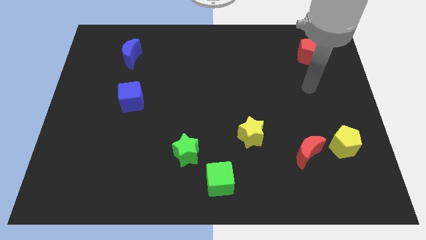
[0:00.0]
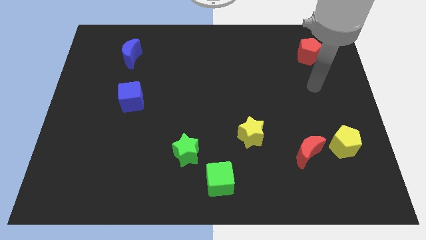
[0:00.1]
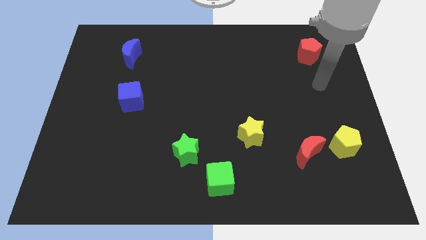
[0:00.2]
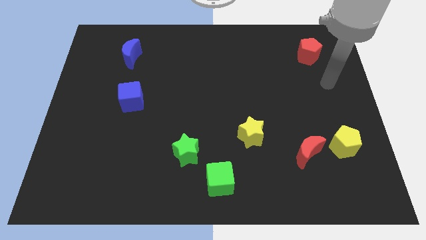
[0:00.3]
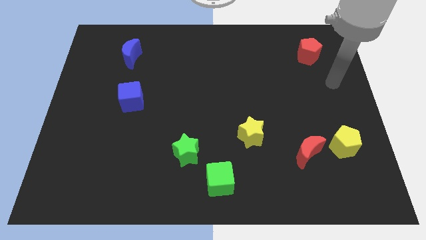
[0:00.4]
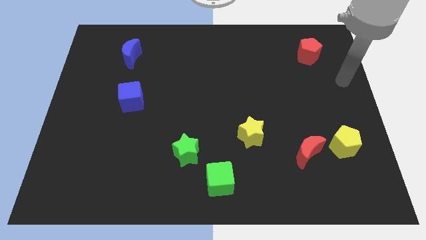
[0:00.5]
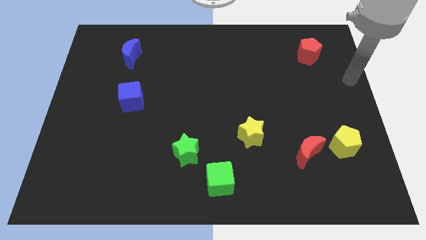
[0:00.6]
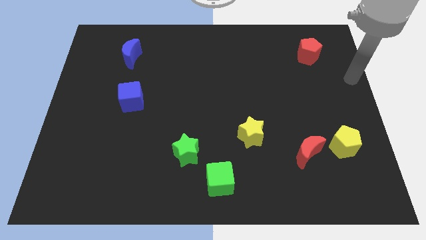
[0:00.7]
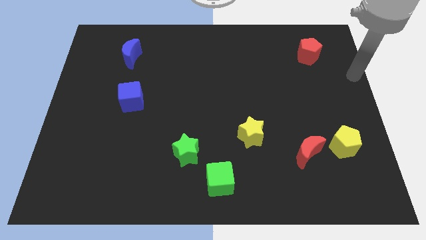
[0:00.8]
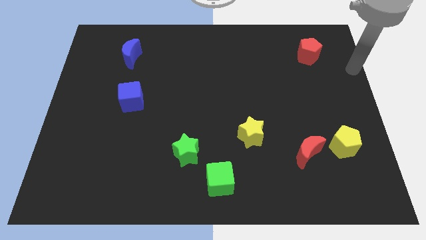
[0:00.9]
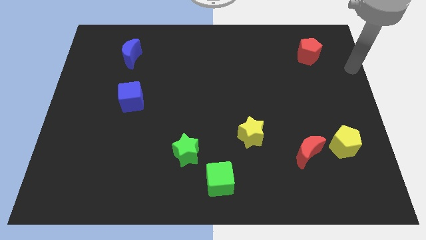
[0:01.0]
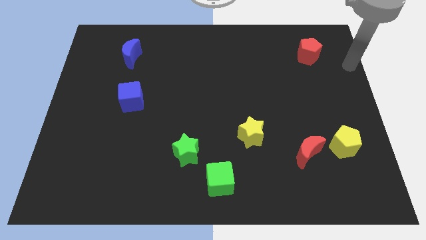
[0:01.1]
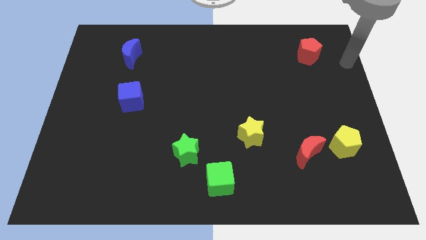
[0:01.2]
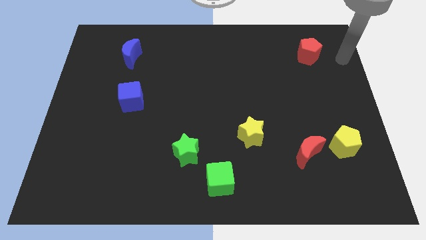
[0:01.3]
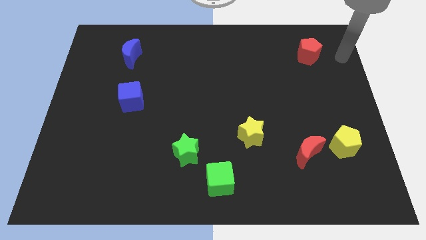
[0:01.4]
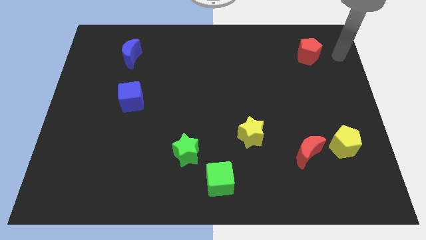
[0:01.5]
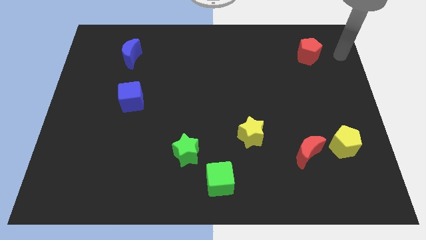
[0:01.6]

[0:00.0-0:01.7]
put your hand parallel right to the red pentagon

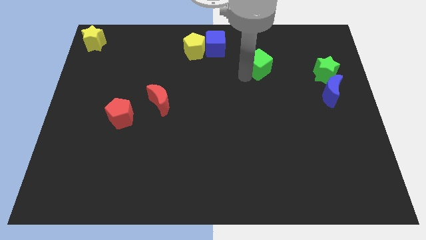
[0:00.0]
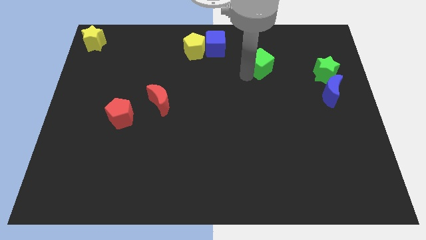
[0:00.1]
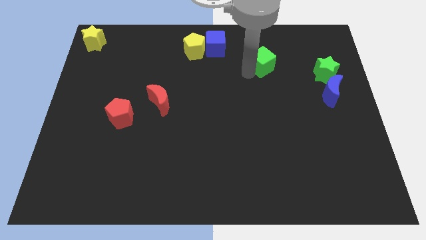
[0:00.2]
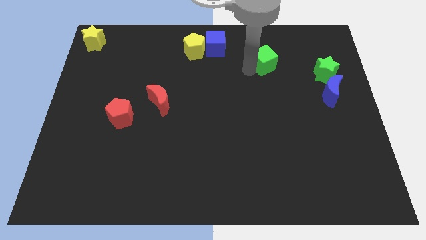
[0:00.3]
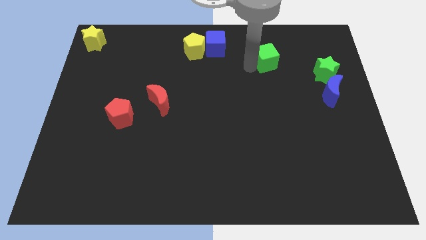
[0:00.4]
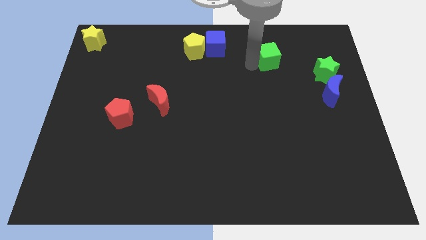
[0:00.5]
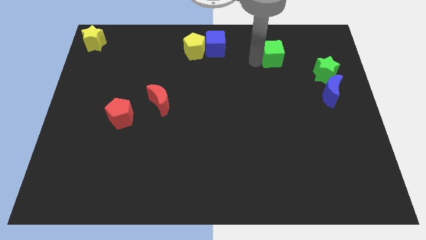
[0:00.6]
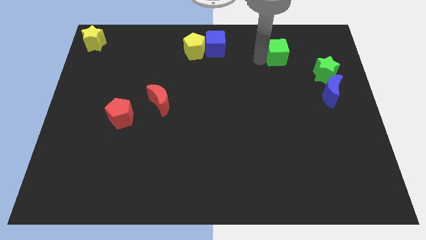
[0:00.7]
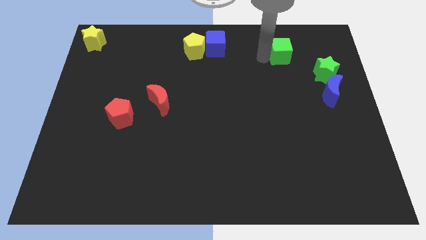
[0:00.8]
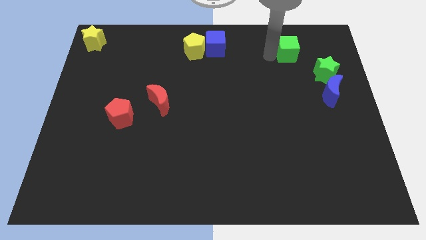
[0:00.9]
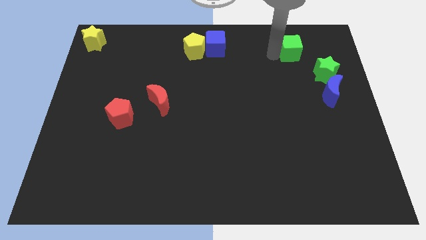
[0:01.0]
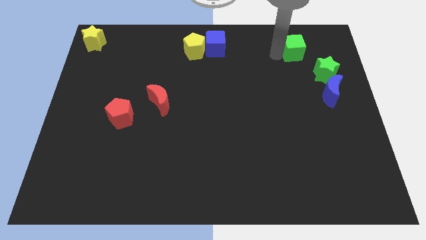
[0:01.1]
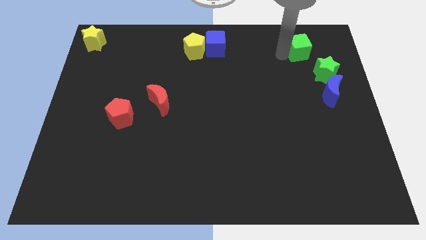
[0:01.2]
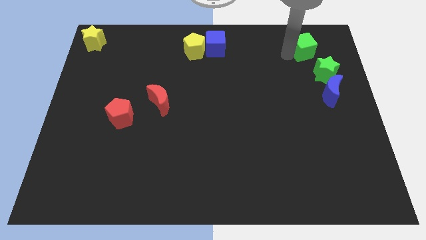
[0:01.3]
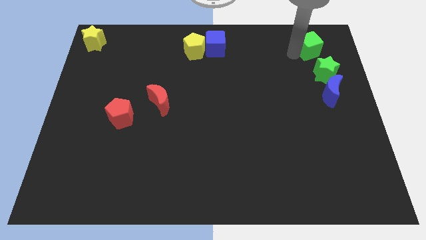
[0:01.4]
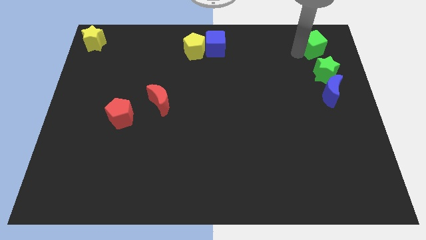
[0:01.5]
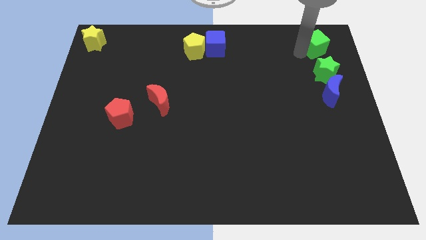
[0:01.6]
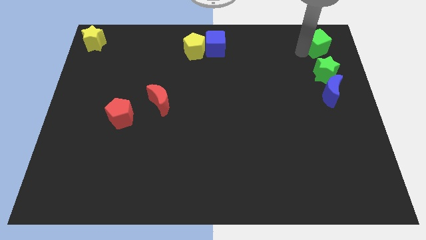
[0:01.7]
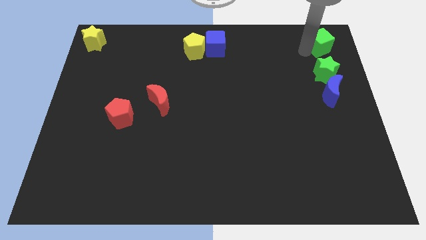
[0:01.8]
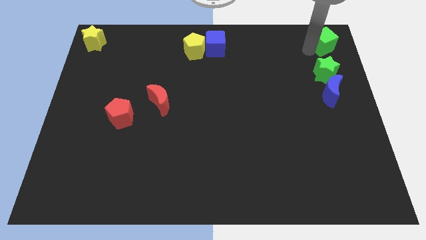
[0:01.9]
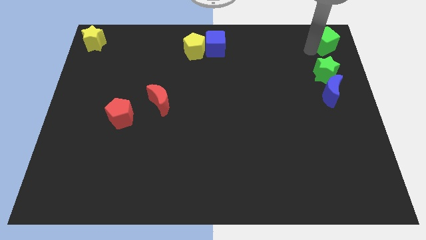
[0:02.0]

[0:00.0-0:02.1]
place the green cube above the green star

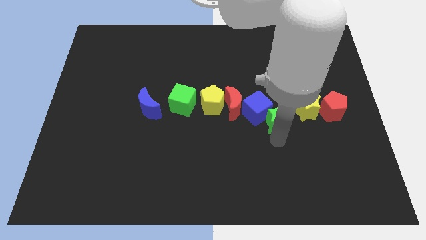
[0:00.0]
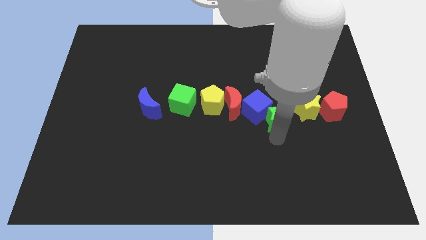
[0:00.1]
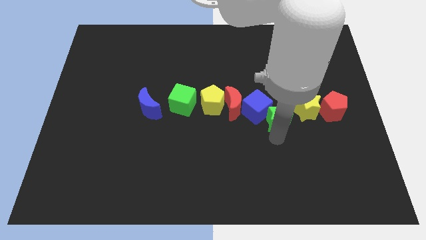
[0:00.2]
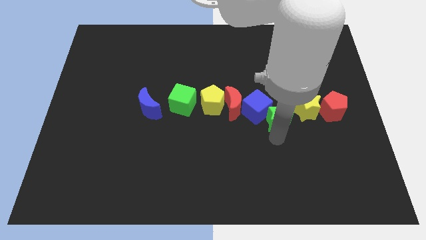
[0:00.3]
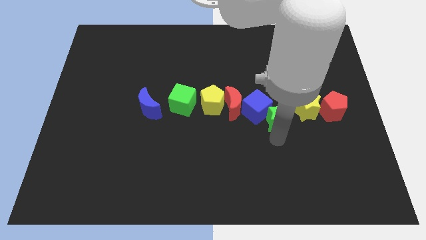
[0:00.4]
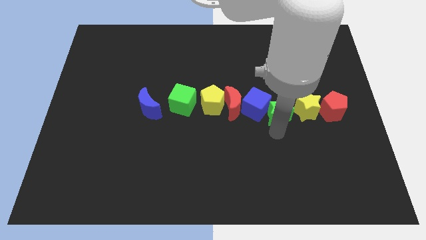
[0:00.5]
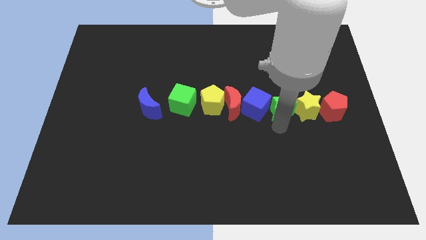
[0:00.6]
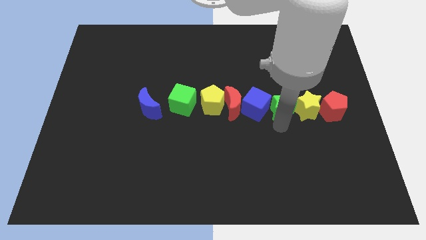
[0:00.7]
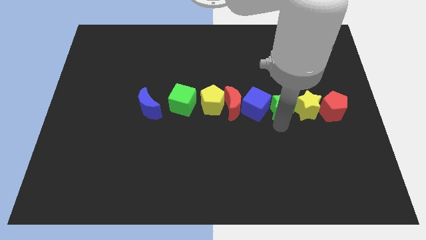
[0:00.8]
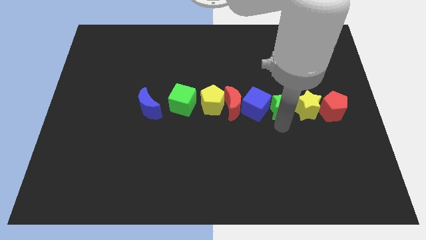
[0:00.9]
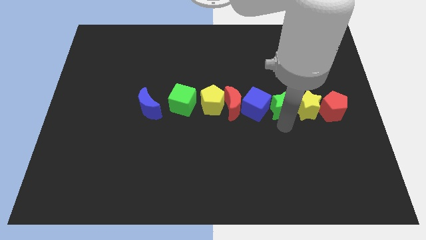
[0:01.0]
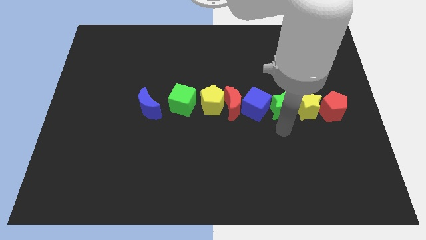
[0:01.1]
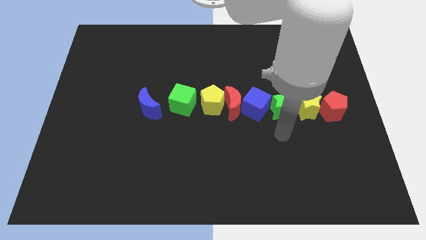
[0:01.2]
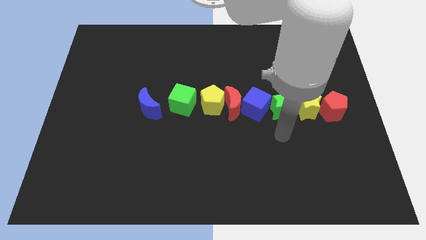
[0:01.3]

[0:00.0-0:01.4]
move the green star up slightly

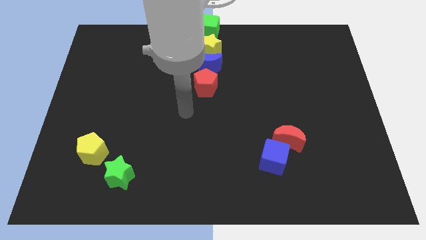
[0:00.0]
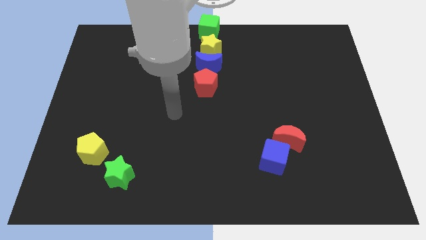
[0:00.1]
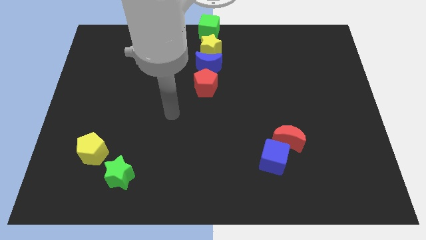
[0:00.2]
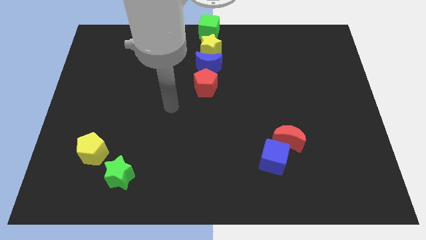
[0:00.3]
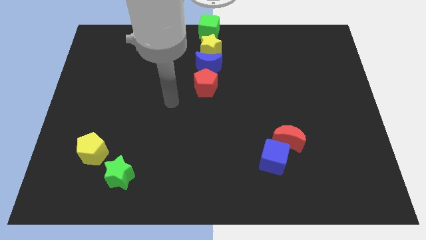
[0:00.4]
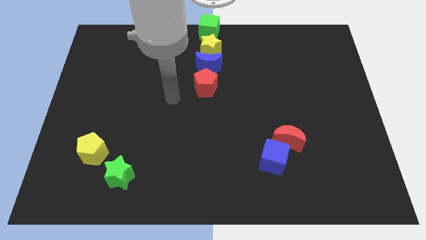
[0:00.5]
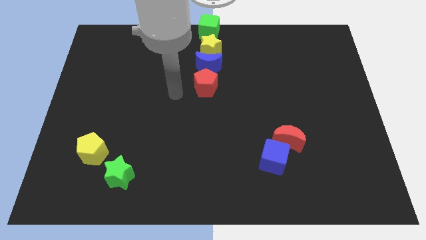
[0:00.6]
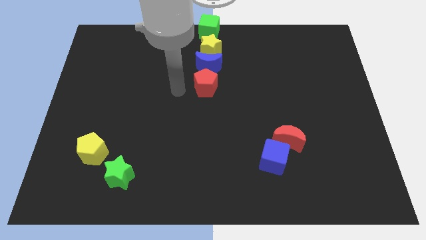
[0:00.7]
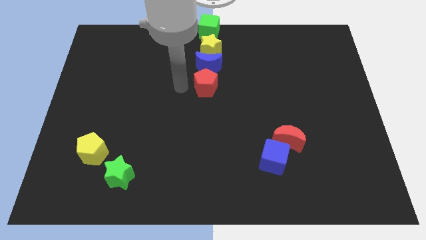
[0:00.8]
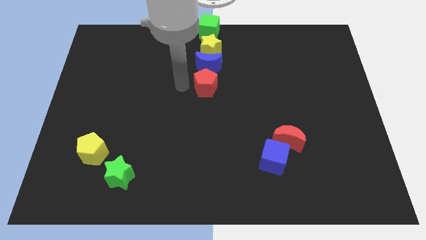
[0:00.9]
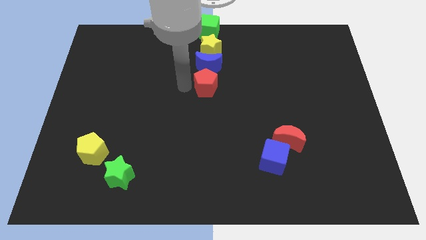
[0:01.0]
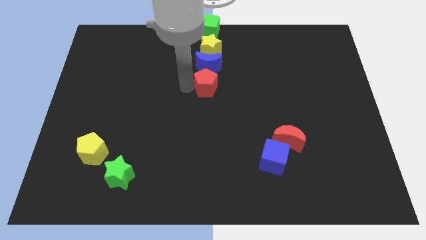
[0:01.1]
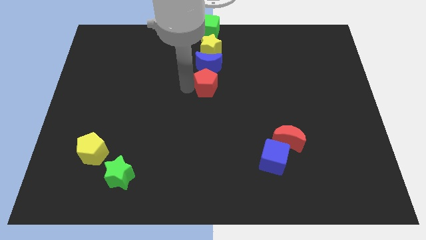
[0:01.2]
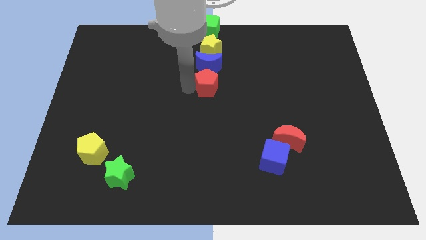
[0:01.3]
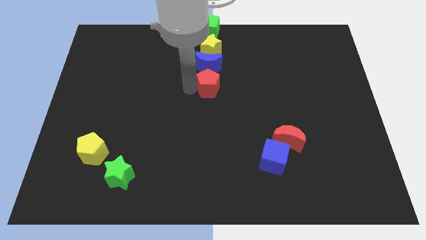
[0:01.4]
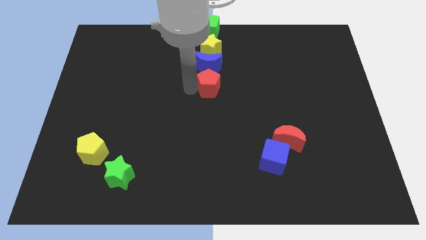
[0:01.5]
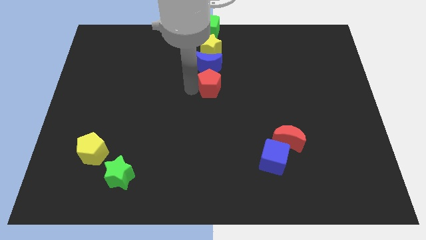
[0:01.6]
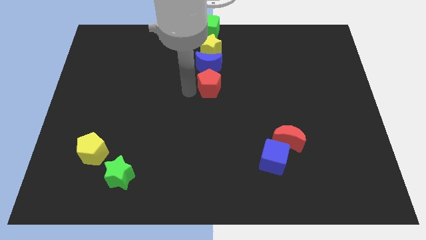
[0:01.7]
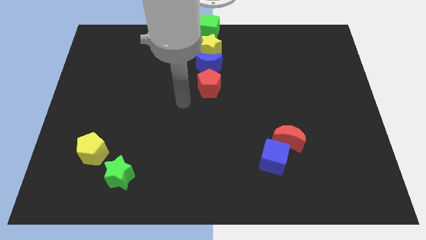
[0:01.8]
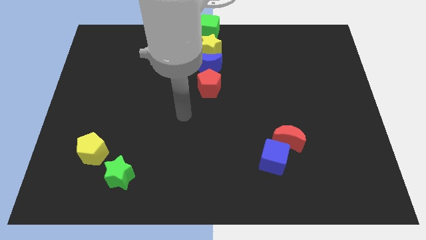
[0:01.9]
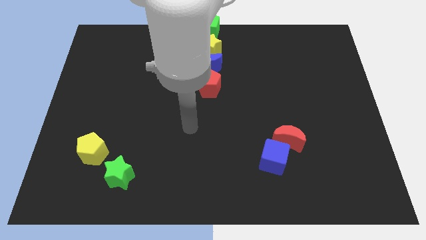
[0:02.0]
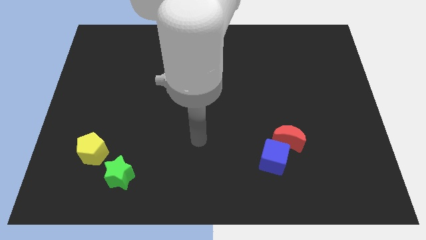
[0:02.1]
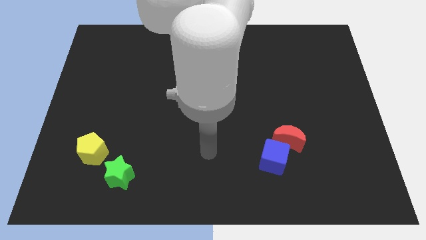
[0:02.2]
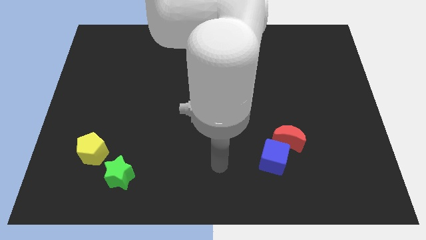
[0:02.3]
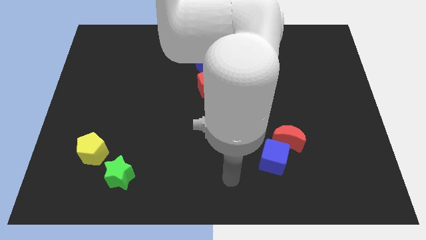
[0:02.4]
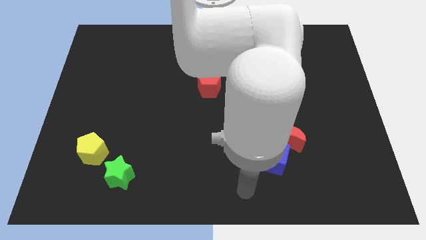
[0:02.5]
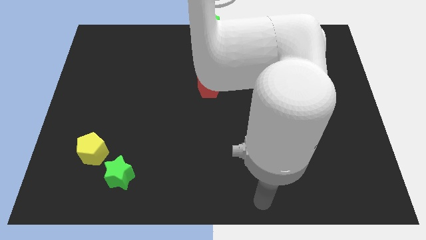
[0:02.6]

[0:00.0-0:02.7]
slightly push the red pentagon towards the right side and move away

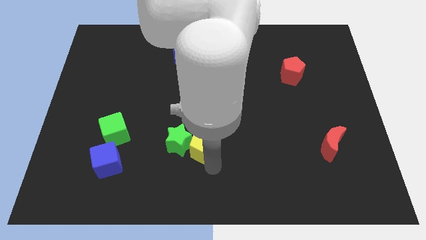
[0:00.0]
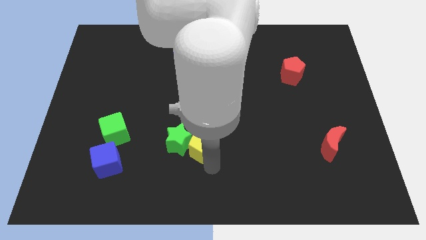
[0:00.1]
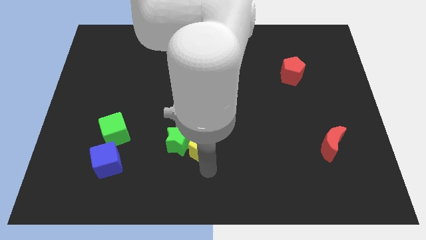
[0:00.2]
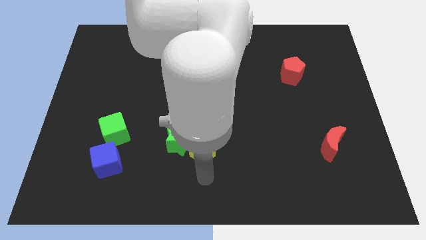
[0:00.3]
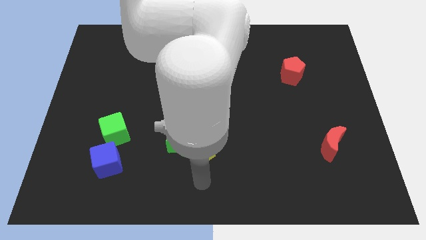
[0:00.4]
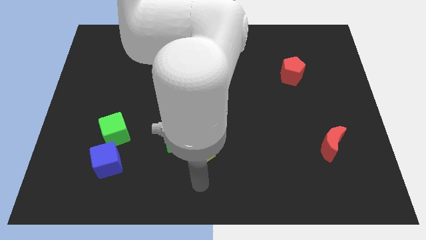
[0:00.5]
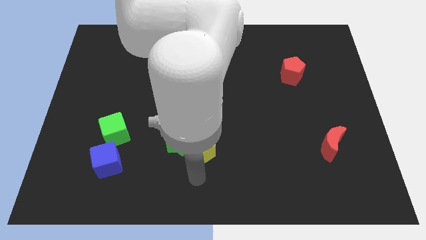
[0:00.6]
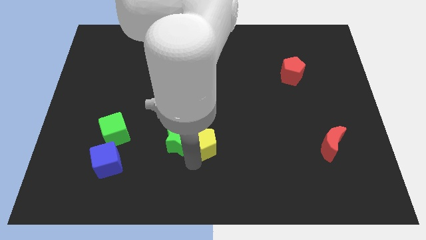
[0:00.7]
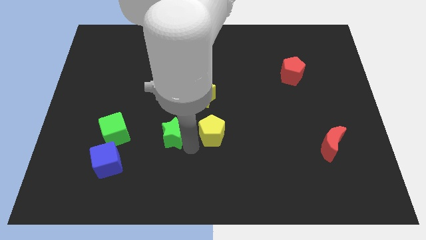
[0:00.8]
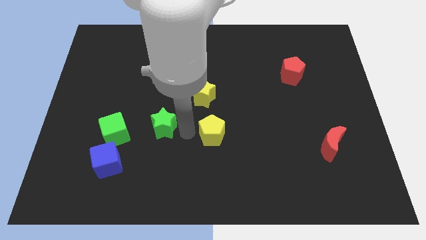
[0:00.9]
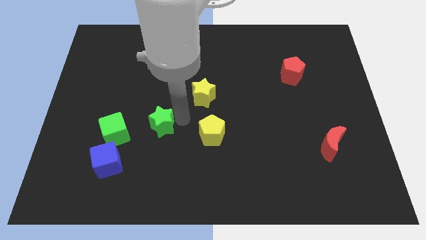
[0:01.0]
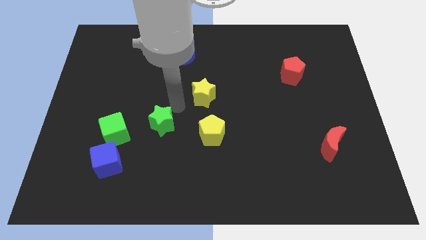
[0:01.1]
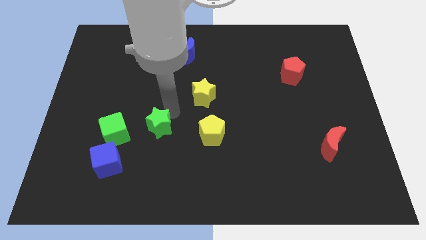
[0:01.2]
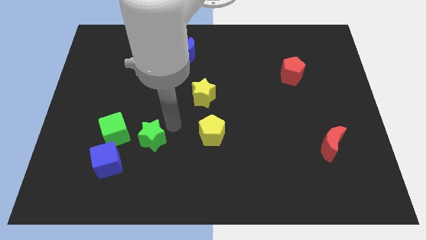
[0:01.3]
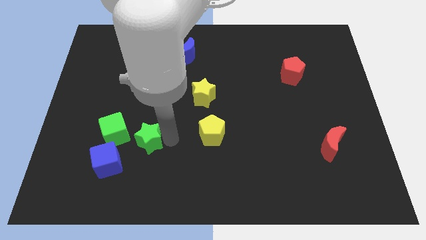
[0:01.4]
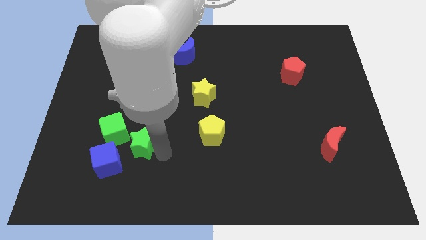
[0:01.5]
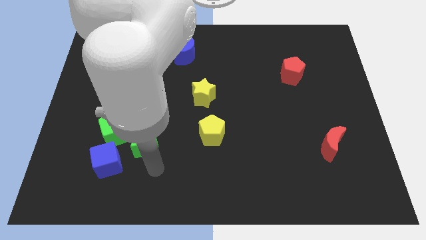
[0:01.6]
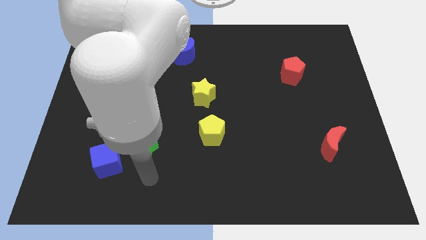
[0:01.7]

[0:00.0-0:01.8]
separate the green star from the yellow pentagon
